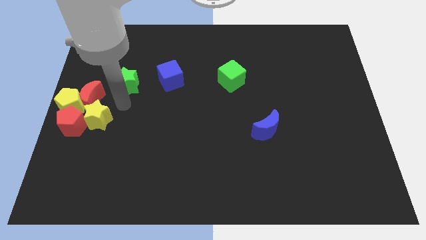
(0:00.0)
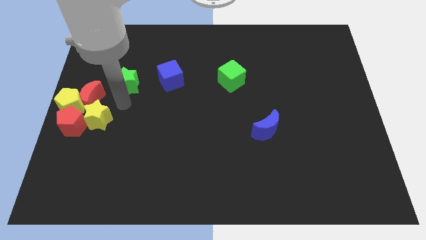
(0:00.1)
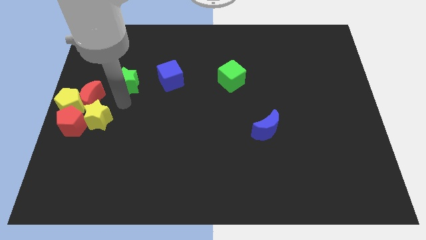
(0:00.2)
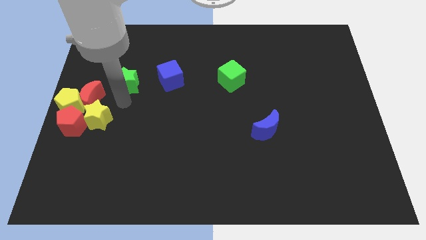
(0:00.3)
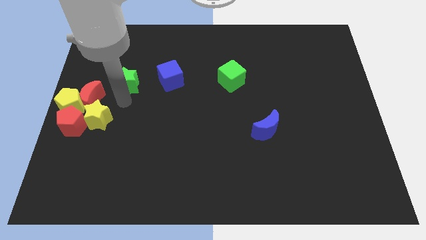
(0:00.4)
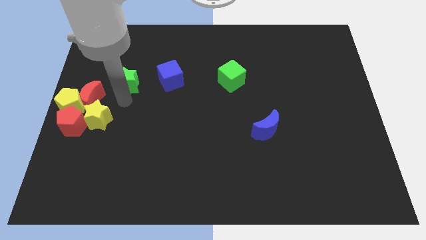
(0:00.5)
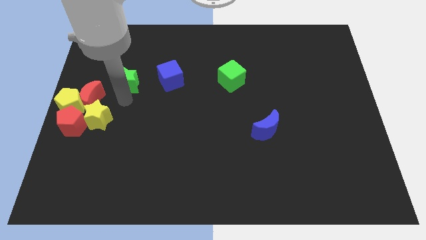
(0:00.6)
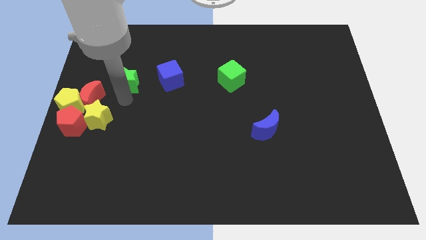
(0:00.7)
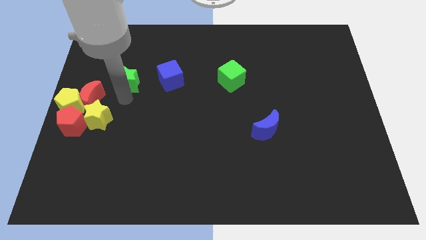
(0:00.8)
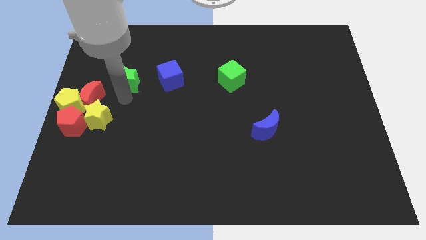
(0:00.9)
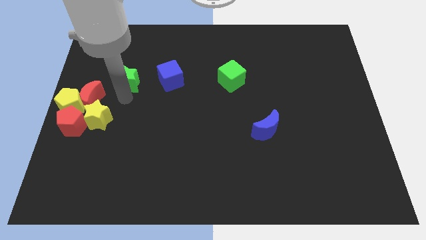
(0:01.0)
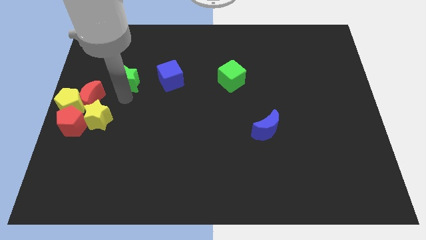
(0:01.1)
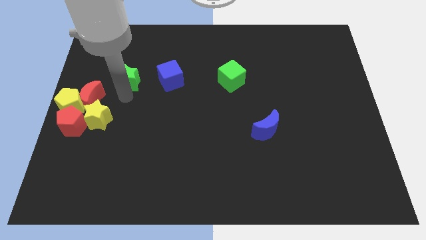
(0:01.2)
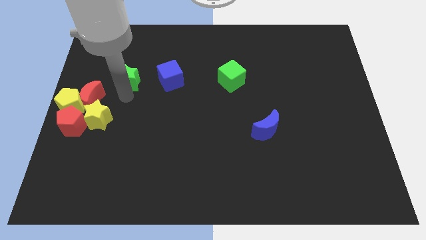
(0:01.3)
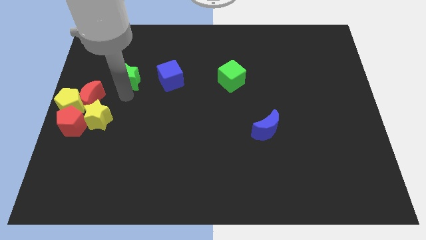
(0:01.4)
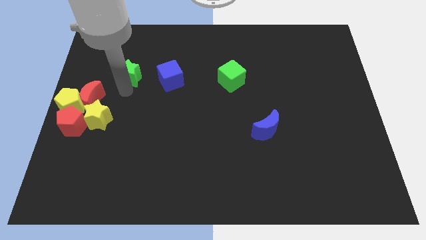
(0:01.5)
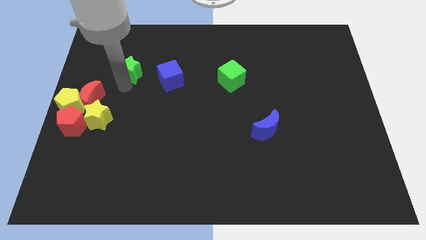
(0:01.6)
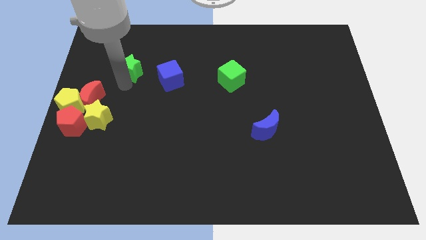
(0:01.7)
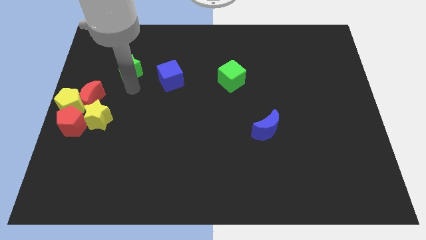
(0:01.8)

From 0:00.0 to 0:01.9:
slightly move the green star upwards

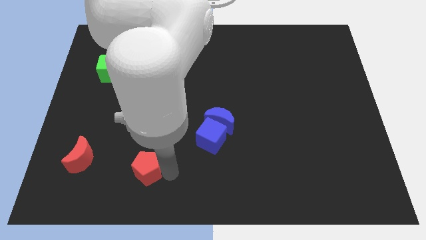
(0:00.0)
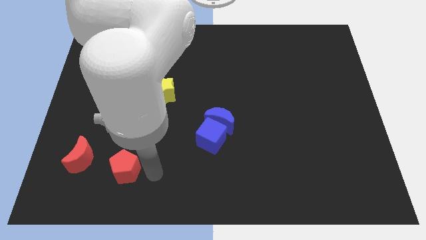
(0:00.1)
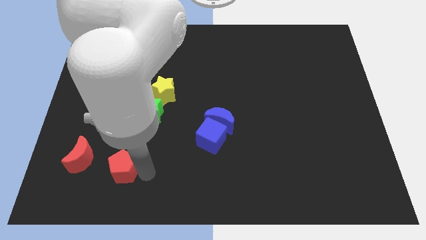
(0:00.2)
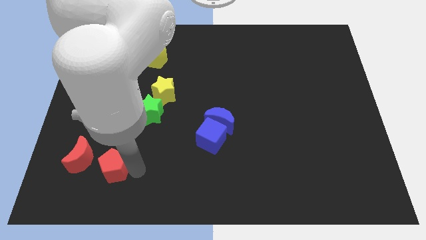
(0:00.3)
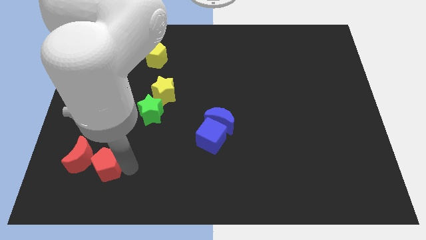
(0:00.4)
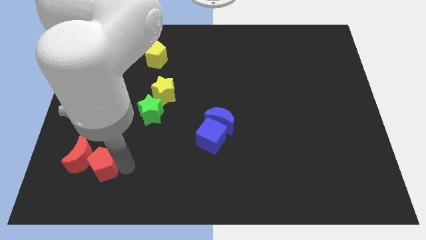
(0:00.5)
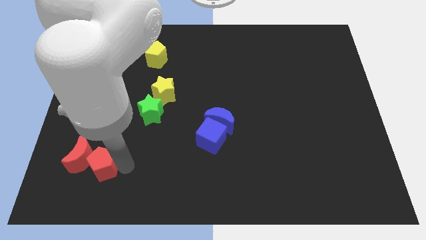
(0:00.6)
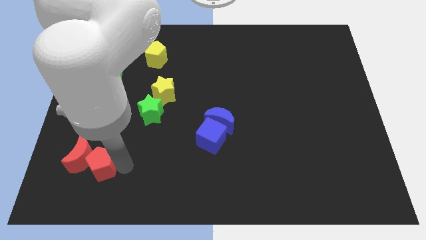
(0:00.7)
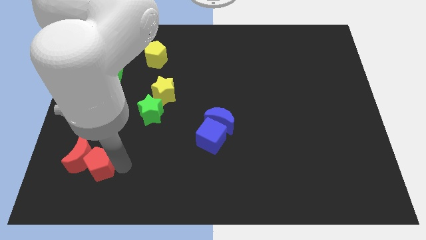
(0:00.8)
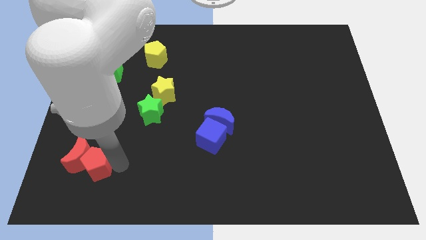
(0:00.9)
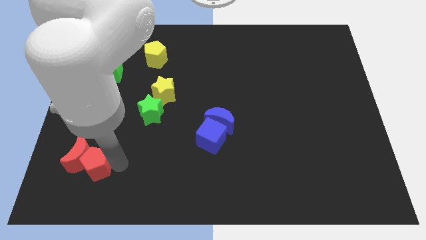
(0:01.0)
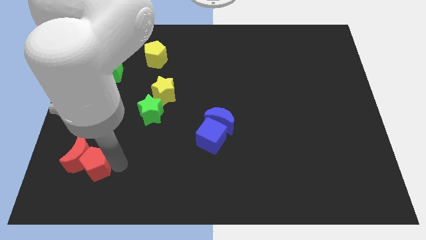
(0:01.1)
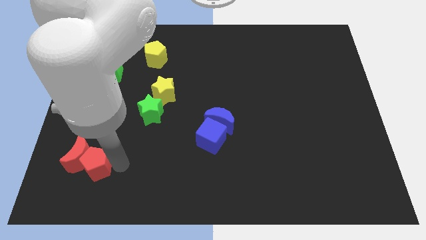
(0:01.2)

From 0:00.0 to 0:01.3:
push the red pentagon into the red crescent

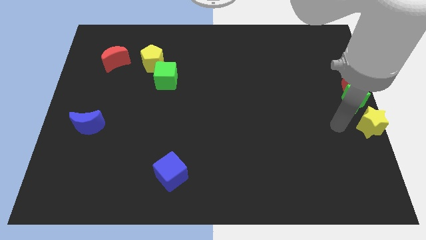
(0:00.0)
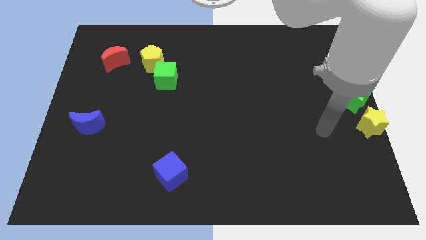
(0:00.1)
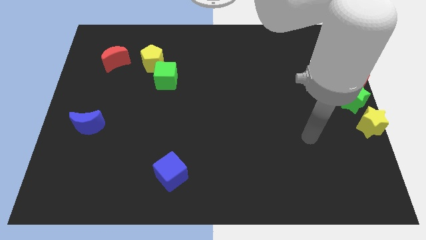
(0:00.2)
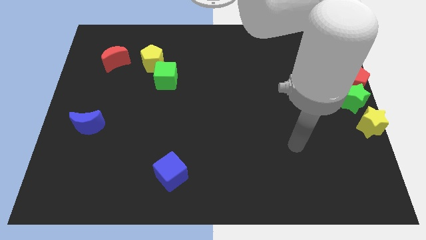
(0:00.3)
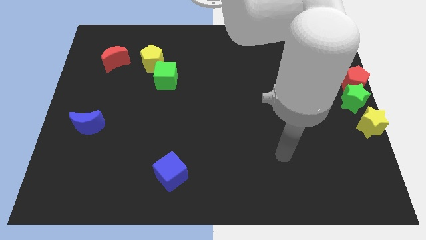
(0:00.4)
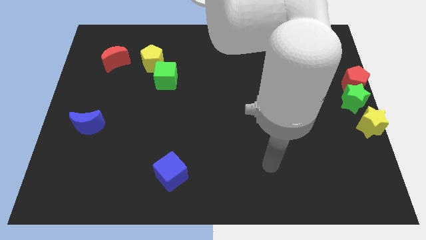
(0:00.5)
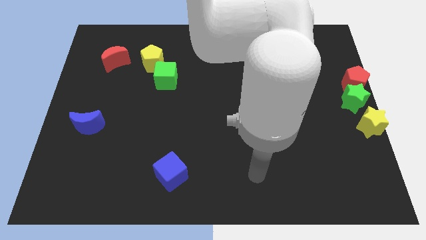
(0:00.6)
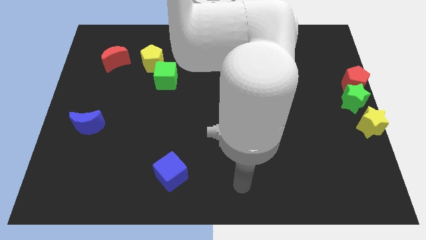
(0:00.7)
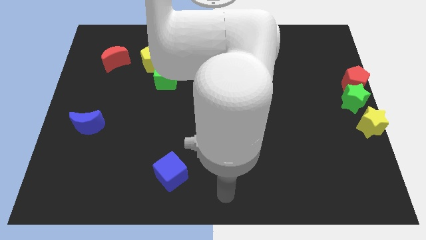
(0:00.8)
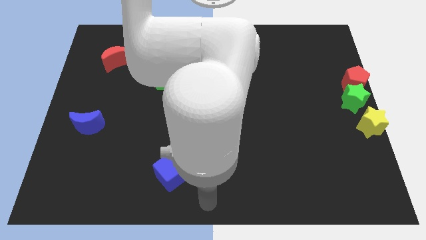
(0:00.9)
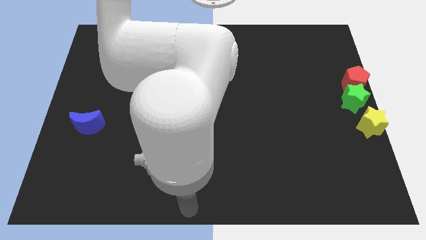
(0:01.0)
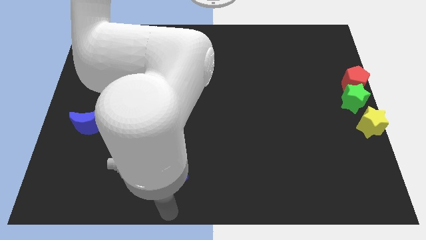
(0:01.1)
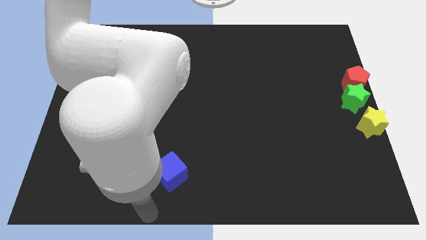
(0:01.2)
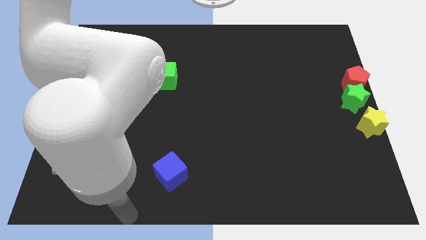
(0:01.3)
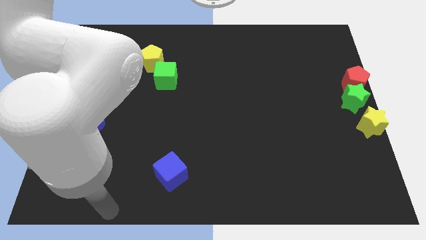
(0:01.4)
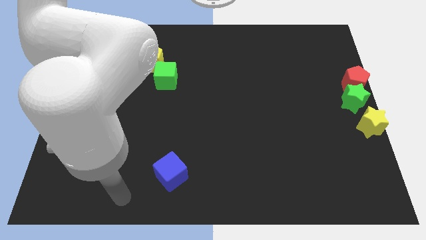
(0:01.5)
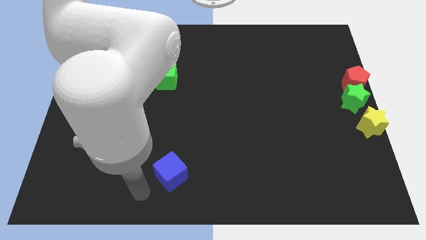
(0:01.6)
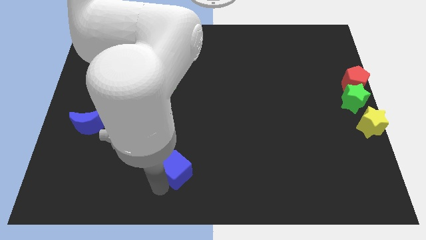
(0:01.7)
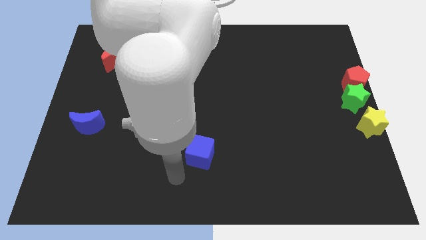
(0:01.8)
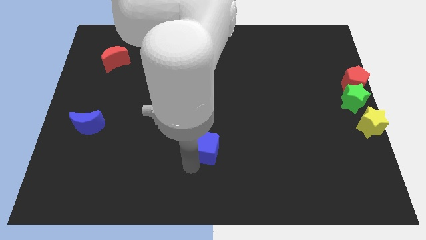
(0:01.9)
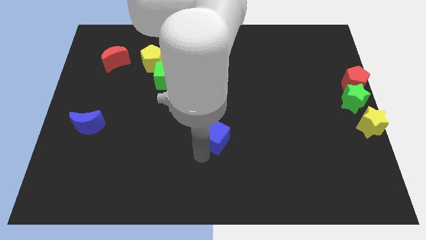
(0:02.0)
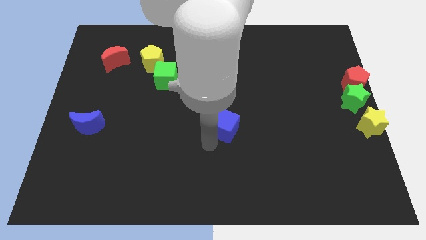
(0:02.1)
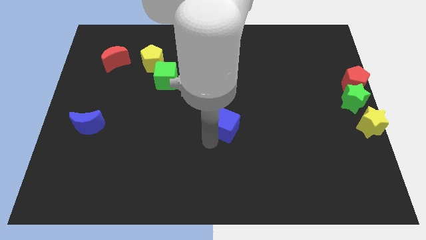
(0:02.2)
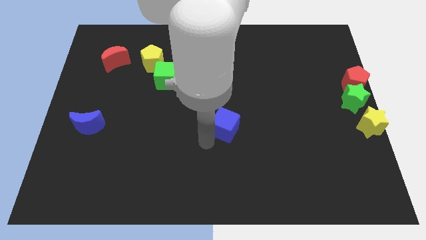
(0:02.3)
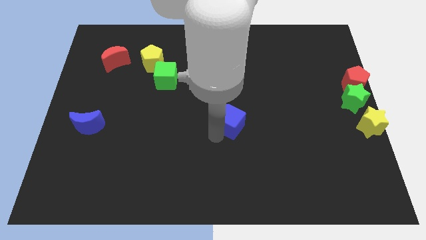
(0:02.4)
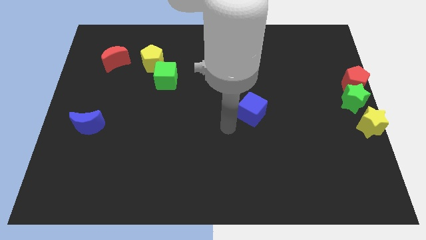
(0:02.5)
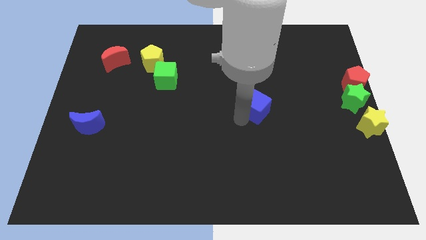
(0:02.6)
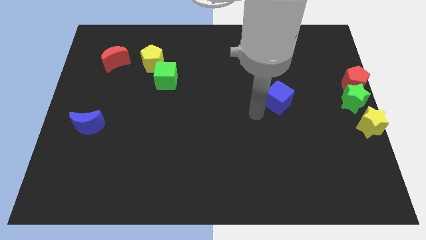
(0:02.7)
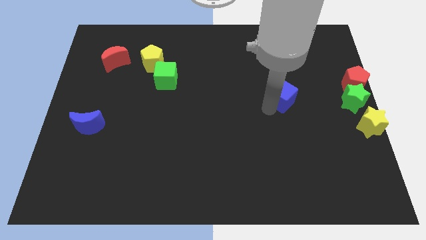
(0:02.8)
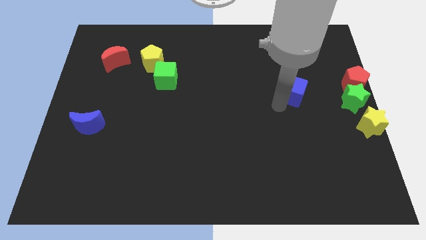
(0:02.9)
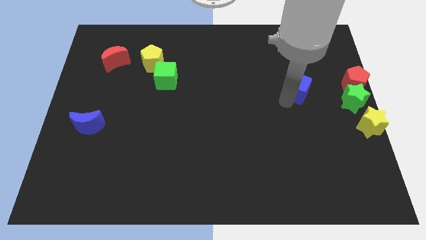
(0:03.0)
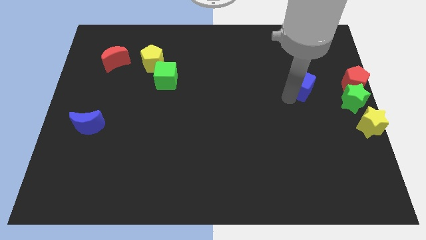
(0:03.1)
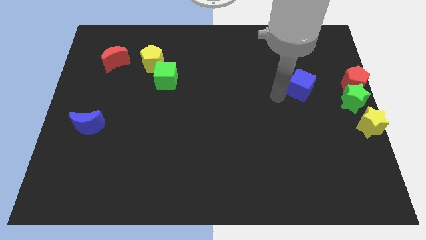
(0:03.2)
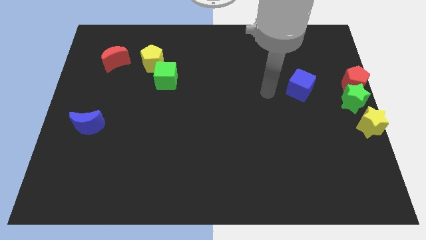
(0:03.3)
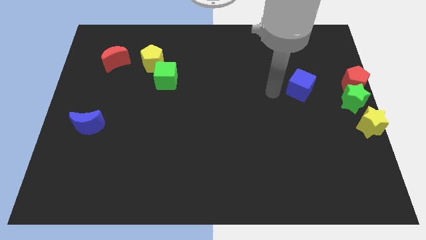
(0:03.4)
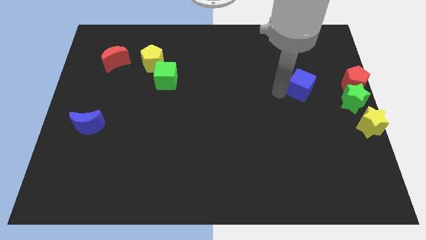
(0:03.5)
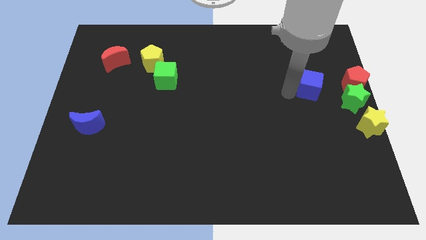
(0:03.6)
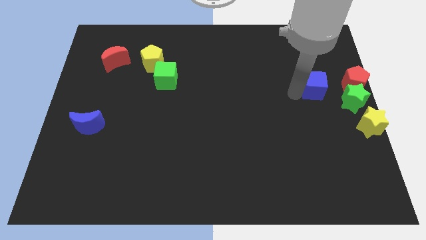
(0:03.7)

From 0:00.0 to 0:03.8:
move the blue cube parallel to red pentagon

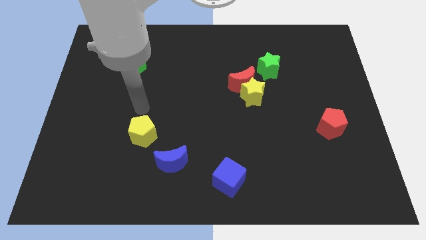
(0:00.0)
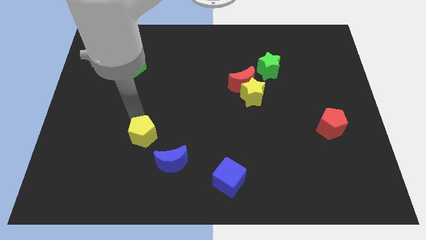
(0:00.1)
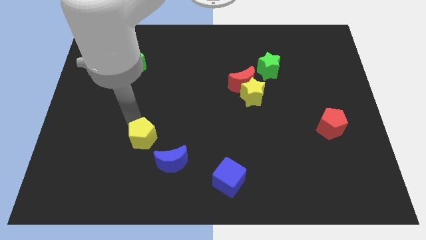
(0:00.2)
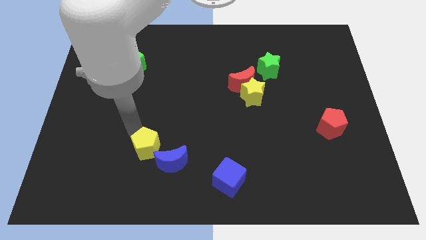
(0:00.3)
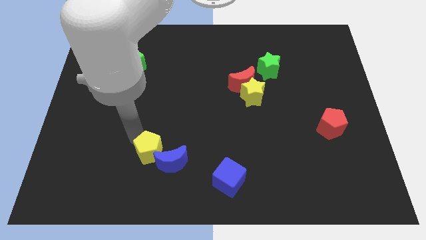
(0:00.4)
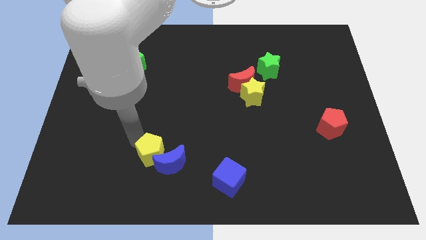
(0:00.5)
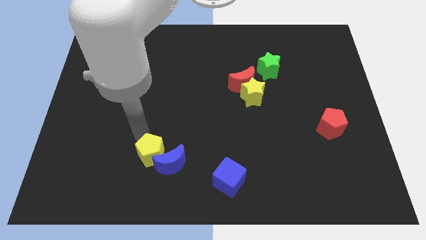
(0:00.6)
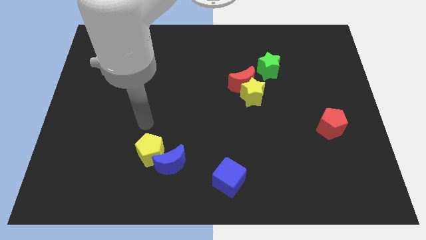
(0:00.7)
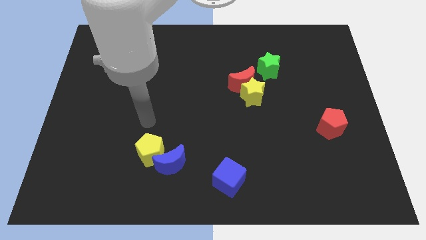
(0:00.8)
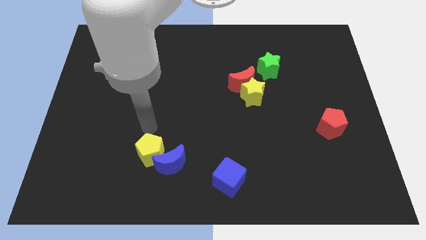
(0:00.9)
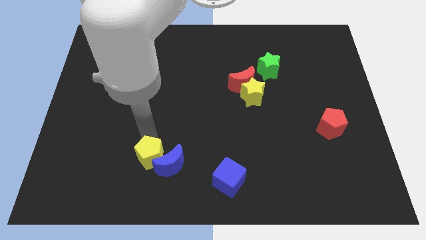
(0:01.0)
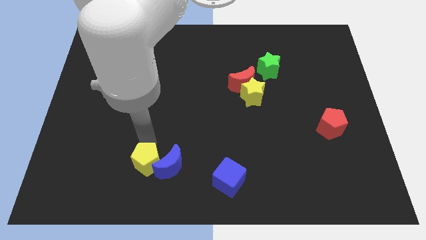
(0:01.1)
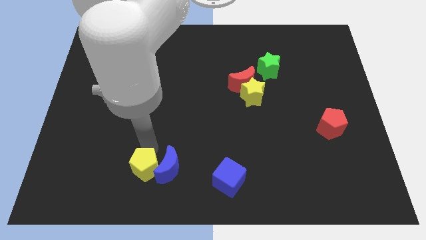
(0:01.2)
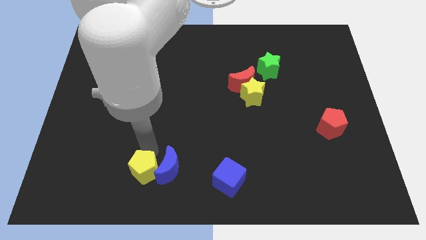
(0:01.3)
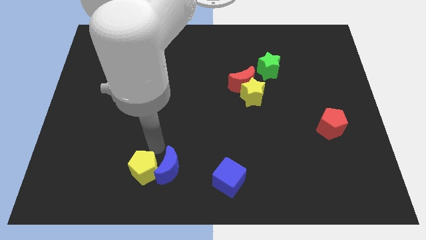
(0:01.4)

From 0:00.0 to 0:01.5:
slide the yellow pentagon into the blue moon

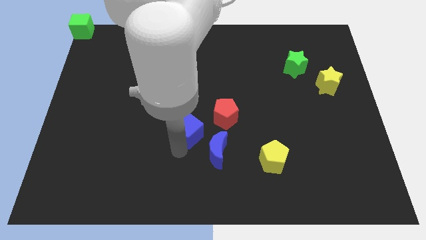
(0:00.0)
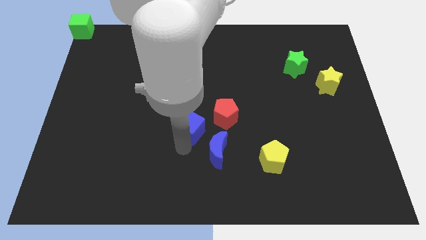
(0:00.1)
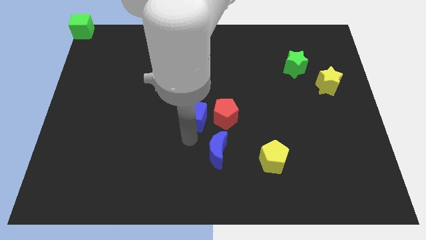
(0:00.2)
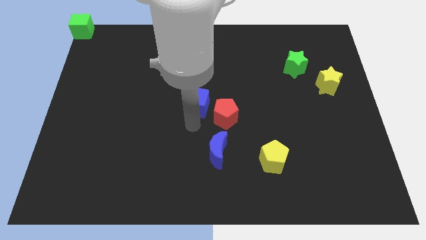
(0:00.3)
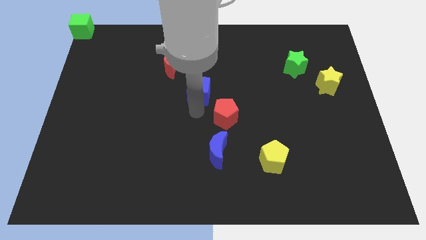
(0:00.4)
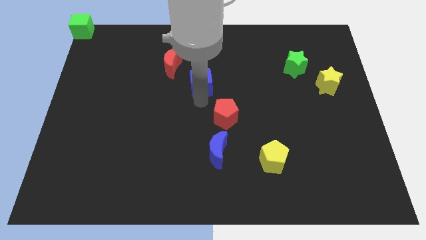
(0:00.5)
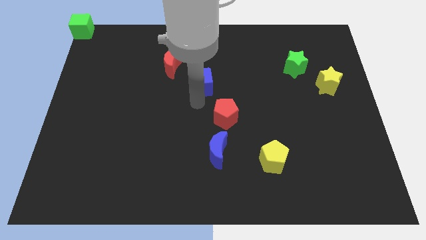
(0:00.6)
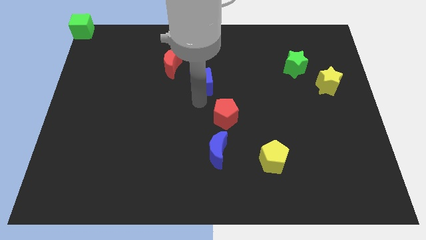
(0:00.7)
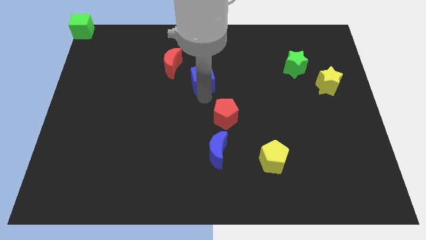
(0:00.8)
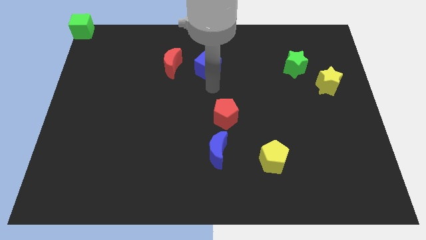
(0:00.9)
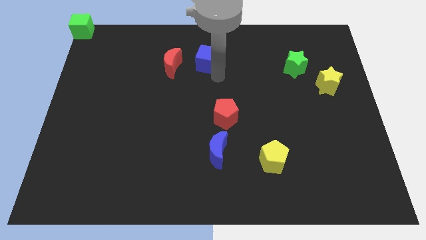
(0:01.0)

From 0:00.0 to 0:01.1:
push the blue cube to the right of the red crescent
